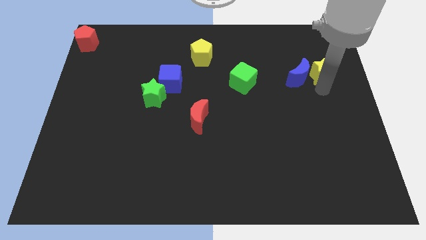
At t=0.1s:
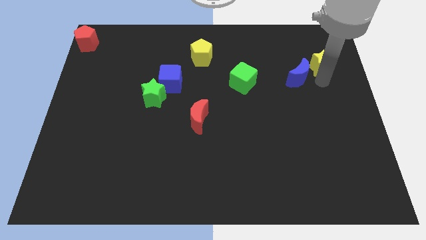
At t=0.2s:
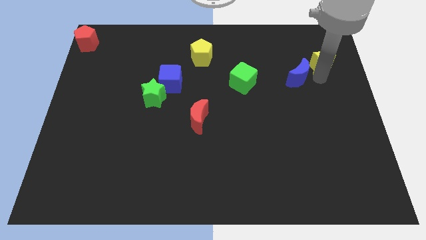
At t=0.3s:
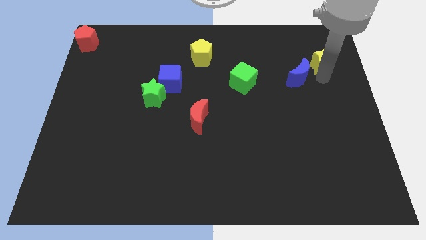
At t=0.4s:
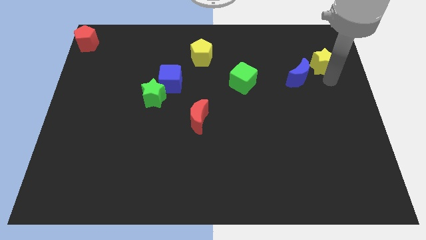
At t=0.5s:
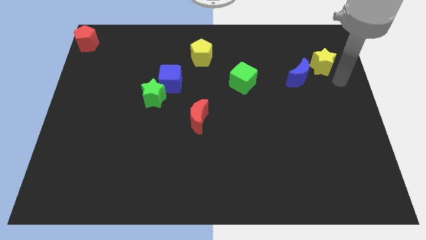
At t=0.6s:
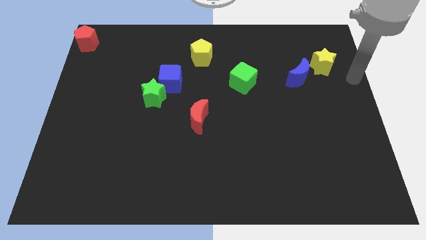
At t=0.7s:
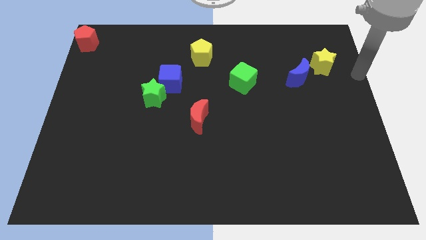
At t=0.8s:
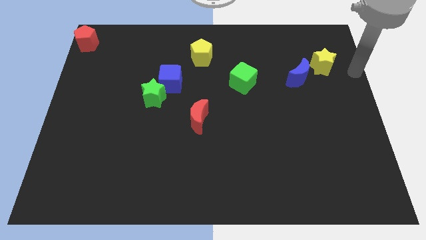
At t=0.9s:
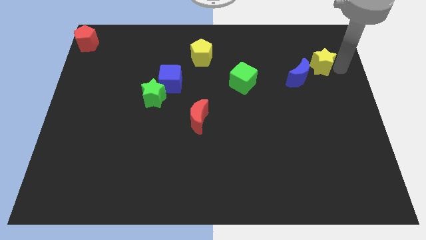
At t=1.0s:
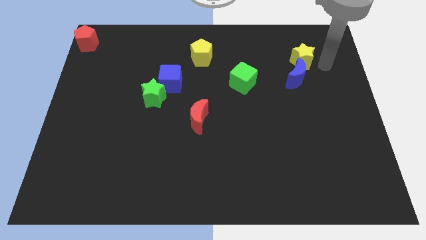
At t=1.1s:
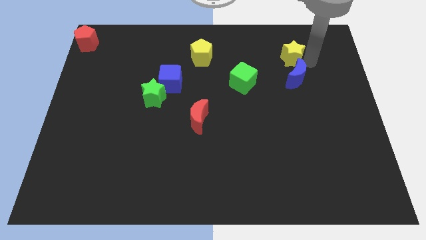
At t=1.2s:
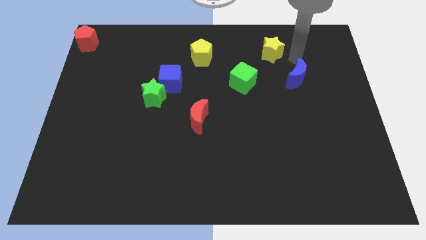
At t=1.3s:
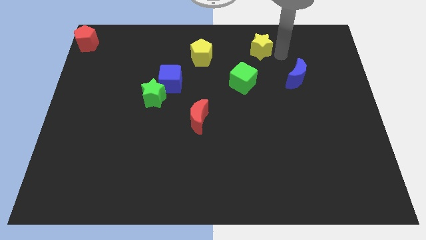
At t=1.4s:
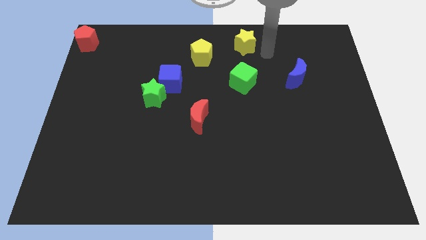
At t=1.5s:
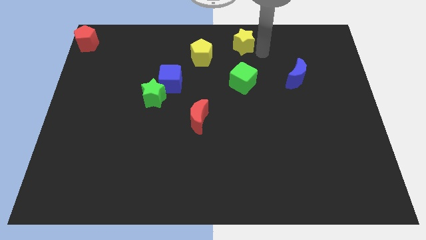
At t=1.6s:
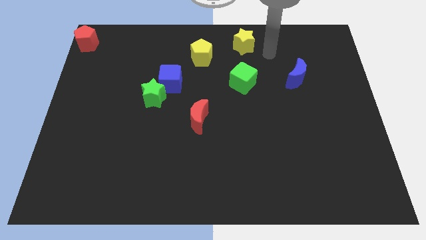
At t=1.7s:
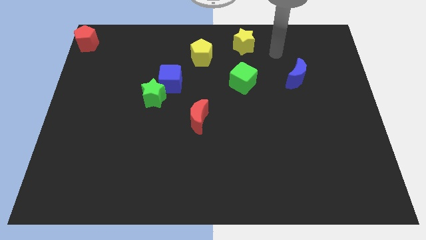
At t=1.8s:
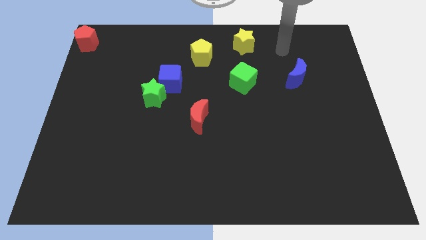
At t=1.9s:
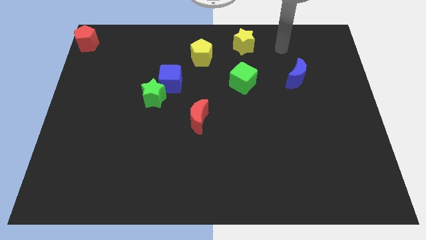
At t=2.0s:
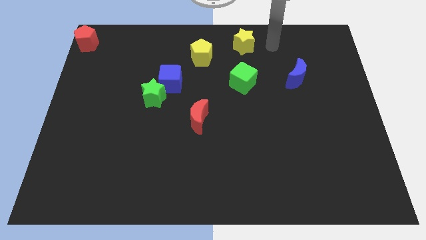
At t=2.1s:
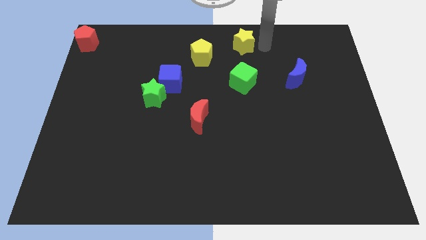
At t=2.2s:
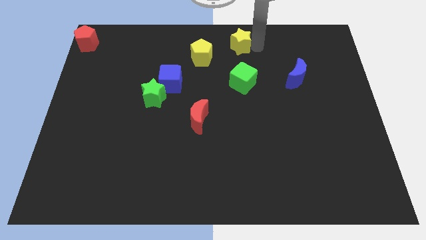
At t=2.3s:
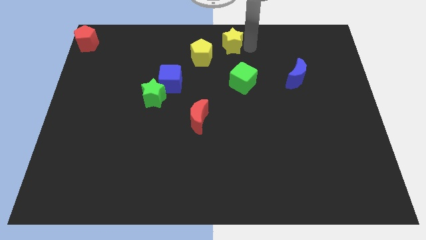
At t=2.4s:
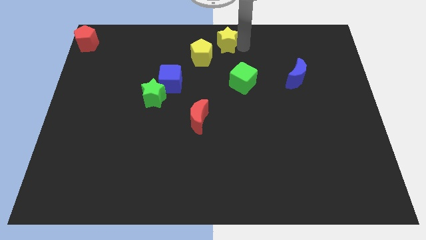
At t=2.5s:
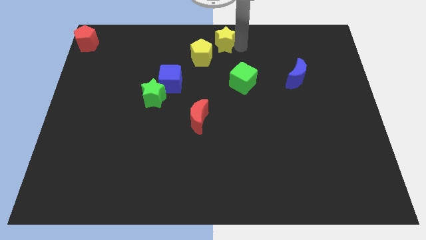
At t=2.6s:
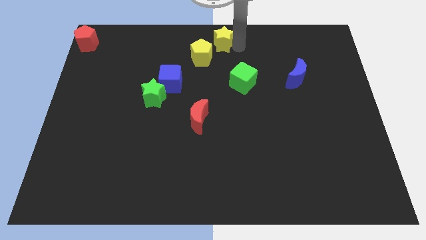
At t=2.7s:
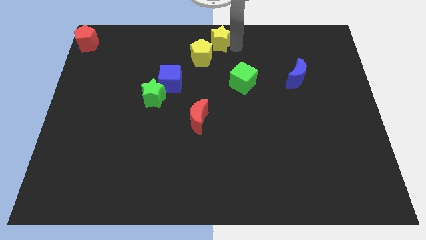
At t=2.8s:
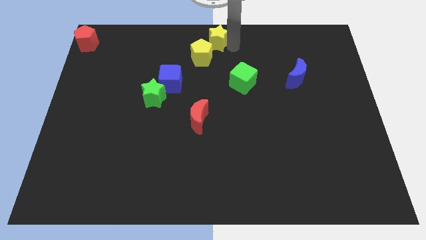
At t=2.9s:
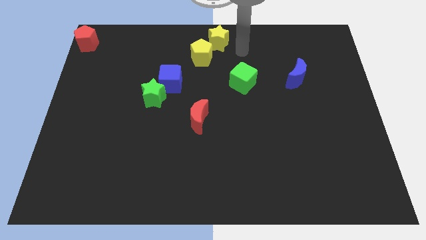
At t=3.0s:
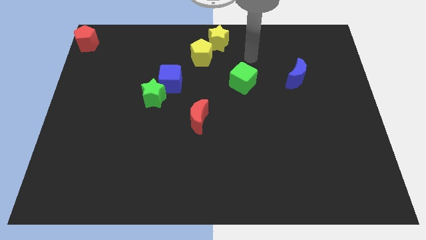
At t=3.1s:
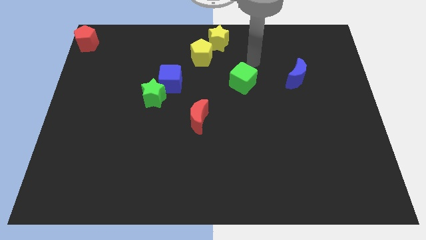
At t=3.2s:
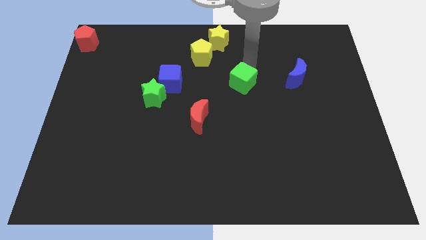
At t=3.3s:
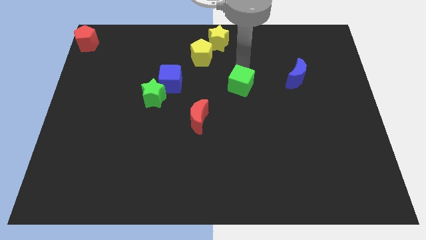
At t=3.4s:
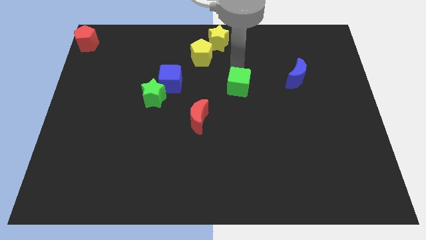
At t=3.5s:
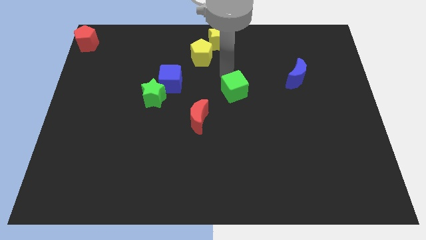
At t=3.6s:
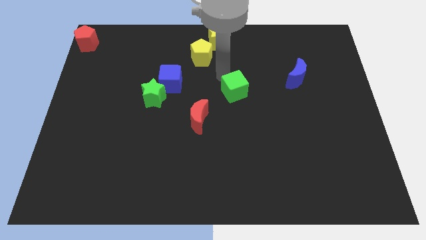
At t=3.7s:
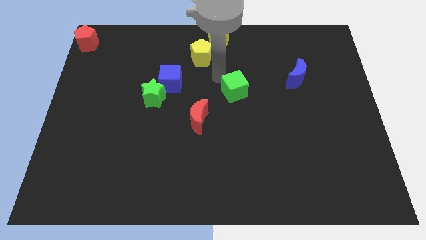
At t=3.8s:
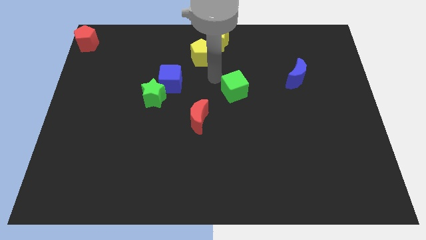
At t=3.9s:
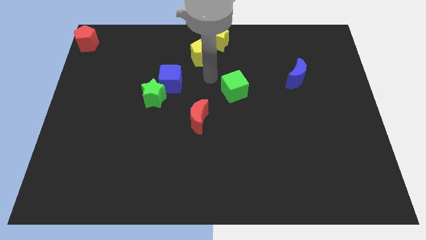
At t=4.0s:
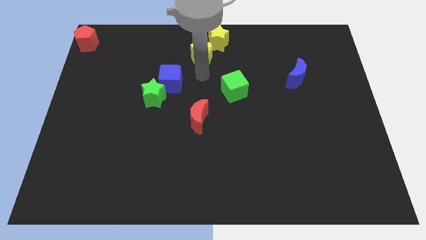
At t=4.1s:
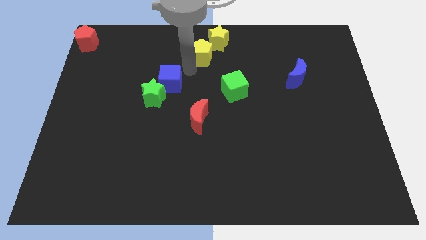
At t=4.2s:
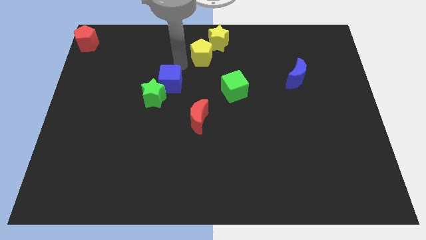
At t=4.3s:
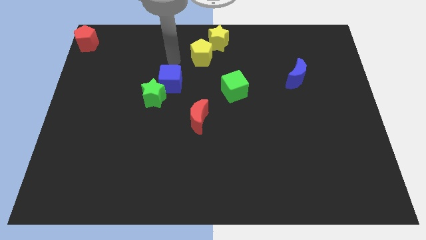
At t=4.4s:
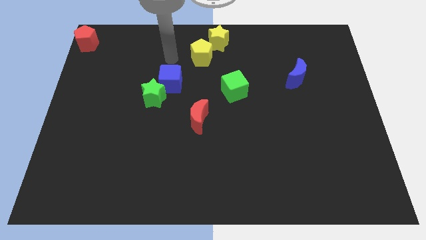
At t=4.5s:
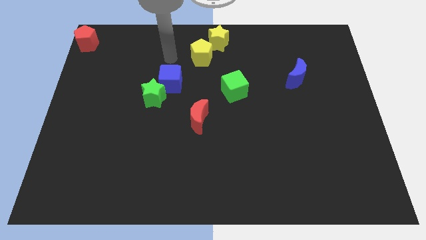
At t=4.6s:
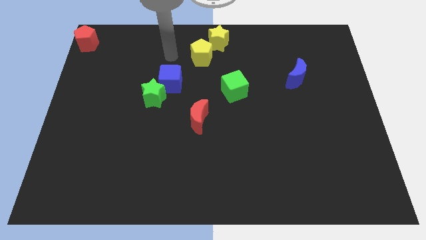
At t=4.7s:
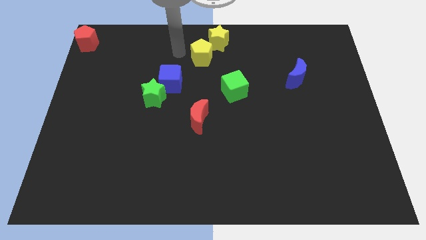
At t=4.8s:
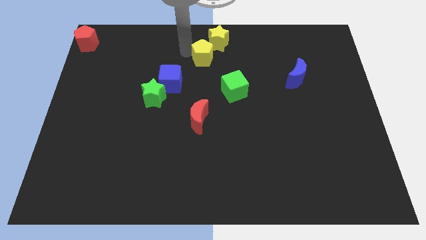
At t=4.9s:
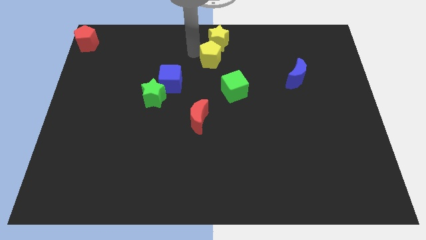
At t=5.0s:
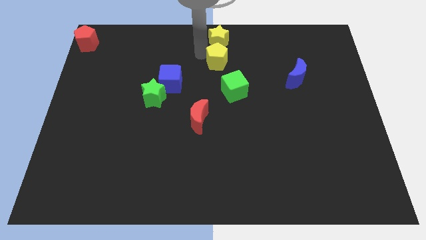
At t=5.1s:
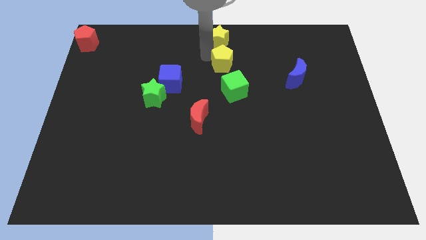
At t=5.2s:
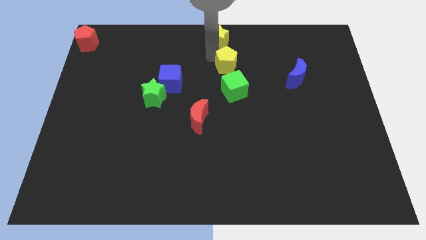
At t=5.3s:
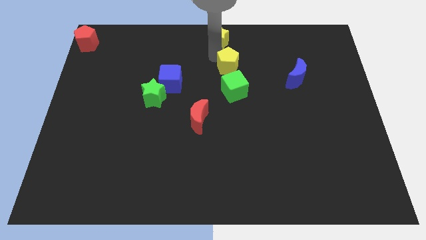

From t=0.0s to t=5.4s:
move the yellow star at the top center of the board

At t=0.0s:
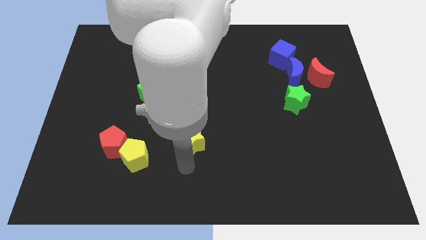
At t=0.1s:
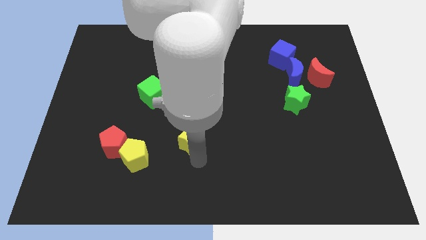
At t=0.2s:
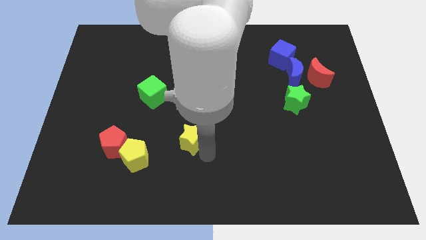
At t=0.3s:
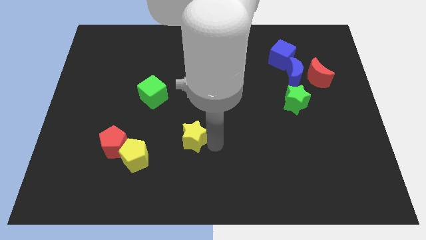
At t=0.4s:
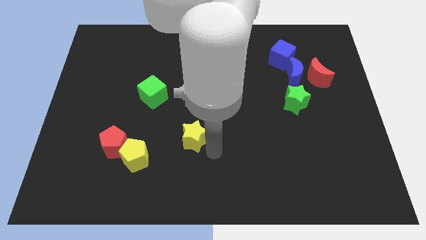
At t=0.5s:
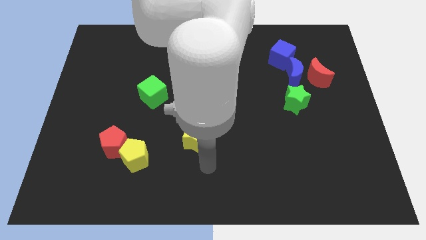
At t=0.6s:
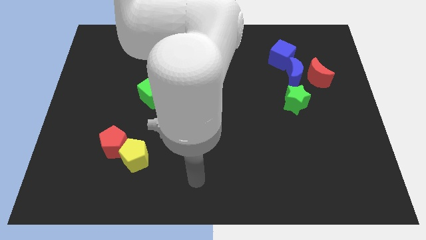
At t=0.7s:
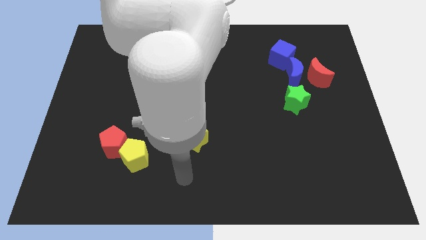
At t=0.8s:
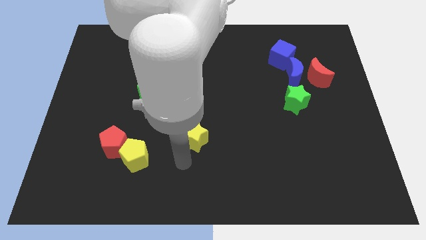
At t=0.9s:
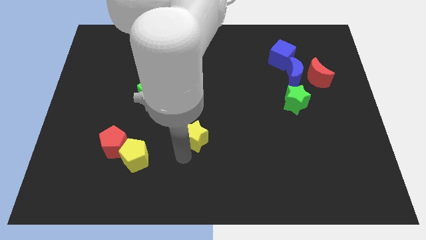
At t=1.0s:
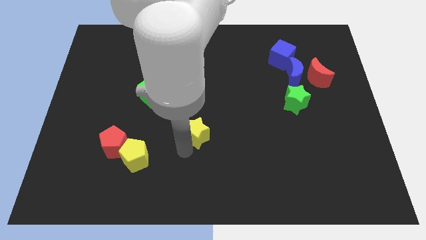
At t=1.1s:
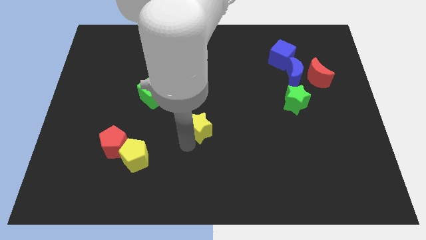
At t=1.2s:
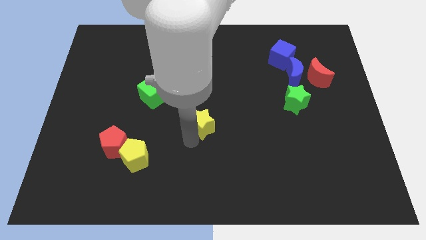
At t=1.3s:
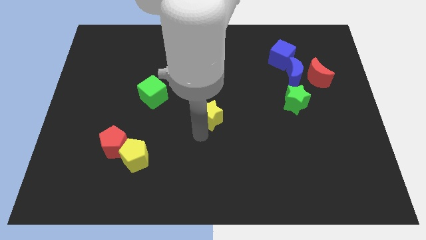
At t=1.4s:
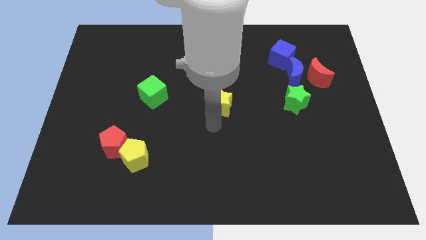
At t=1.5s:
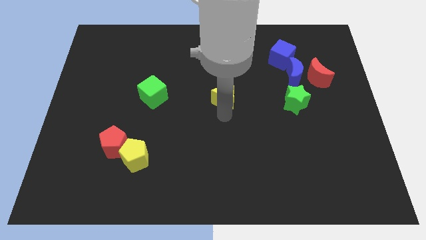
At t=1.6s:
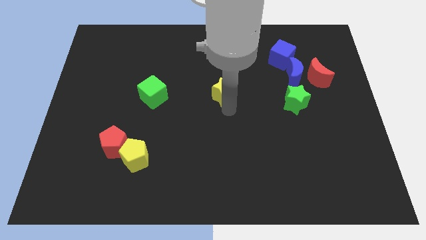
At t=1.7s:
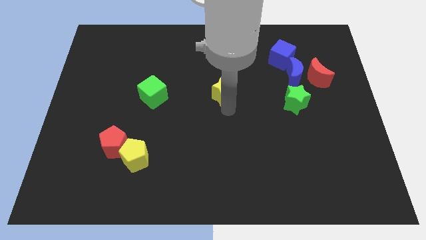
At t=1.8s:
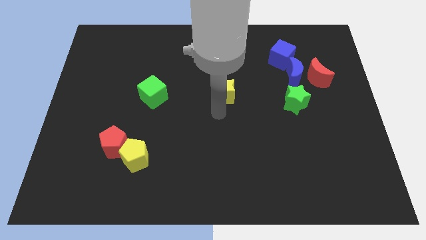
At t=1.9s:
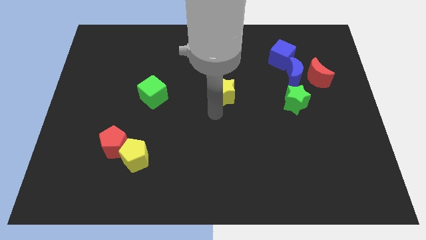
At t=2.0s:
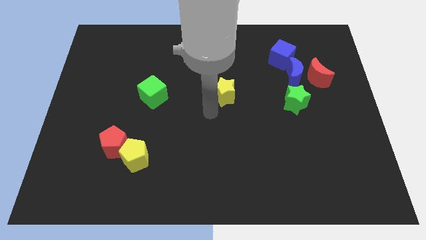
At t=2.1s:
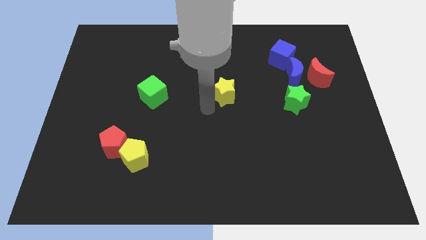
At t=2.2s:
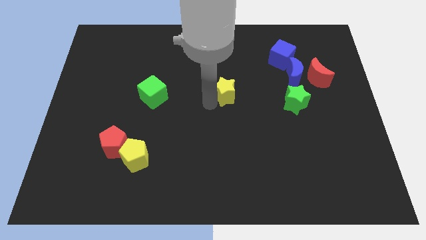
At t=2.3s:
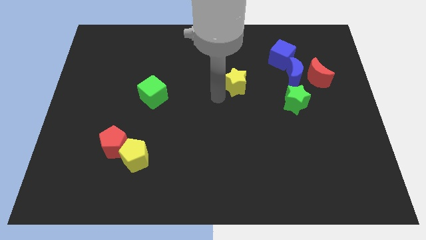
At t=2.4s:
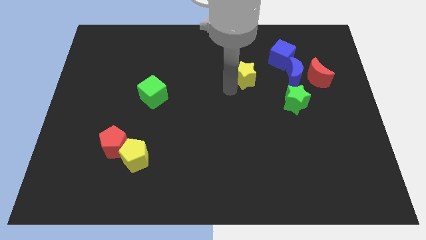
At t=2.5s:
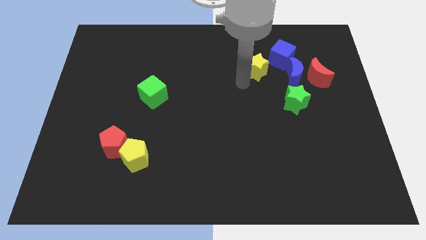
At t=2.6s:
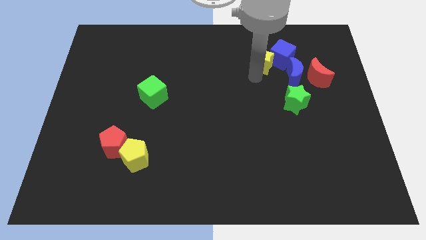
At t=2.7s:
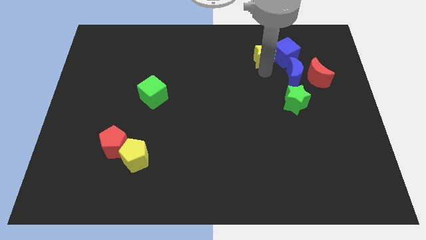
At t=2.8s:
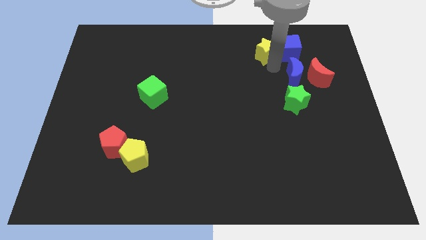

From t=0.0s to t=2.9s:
move yellow star beside blue cube

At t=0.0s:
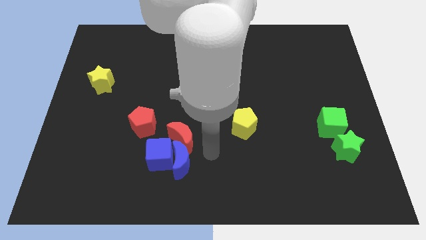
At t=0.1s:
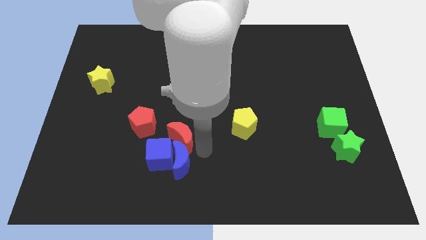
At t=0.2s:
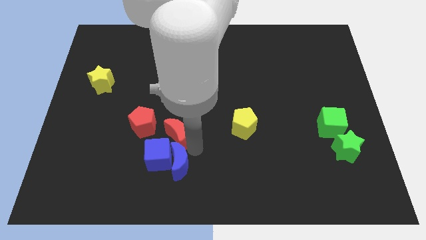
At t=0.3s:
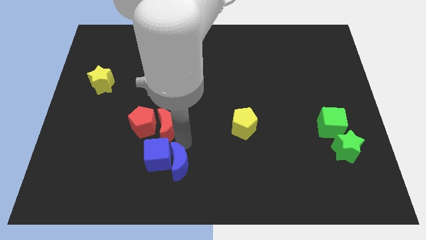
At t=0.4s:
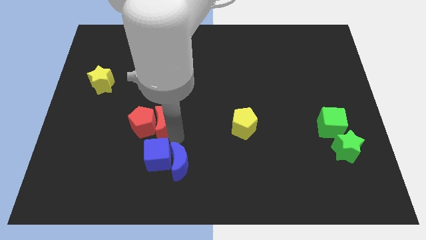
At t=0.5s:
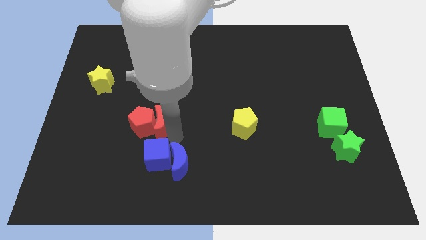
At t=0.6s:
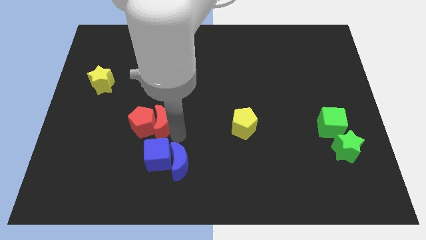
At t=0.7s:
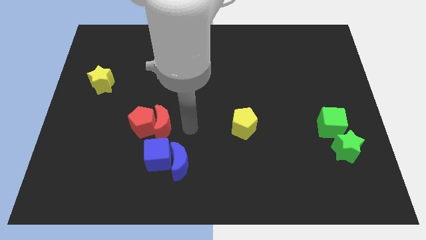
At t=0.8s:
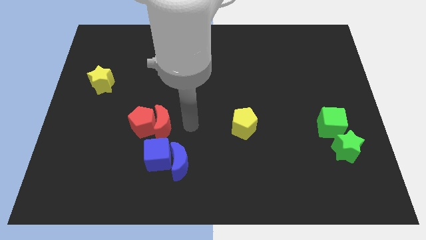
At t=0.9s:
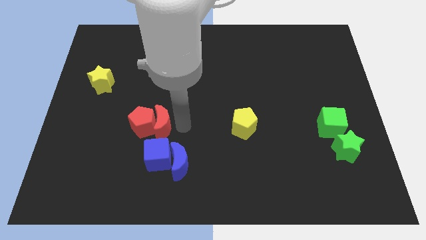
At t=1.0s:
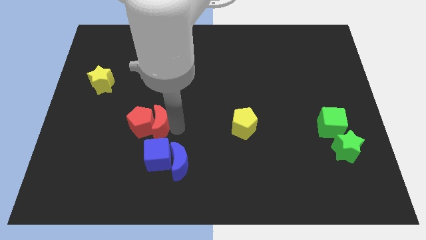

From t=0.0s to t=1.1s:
move red crescent into red pentagon
